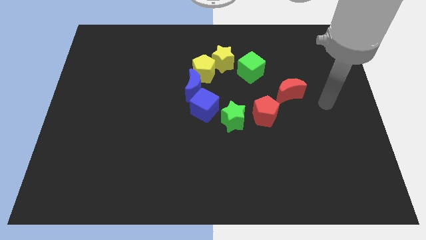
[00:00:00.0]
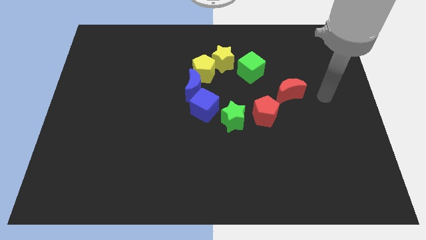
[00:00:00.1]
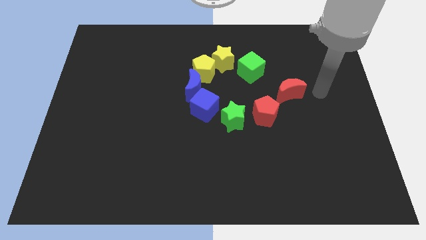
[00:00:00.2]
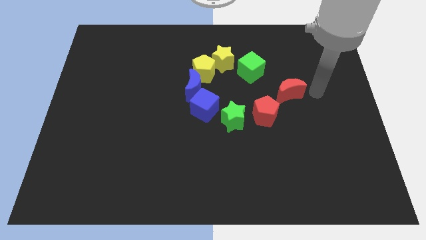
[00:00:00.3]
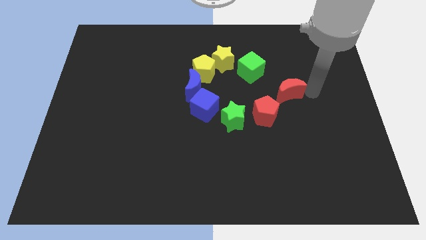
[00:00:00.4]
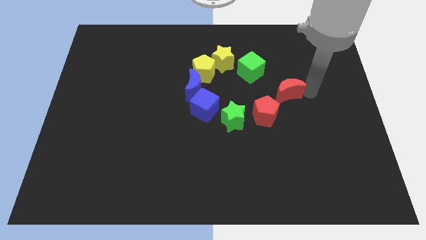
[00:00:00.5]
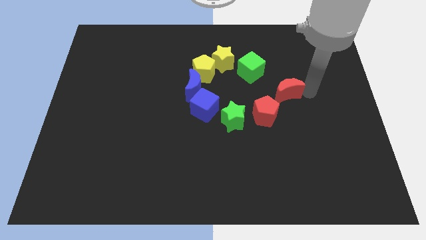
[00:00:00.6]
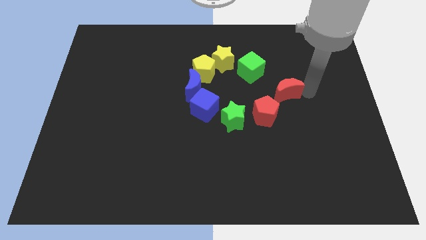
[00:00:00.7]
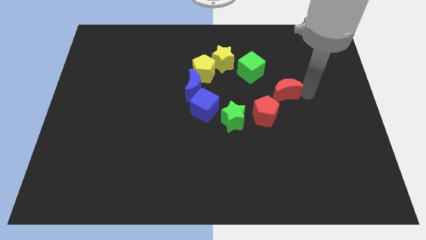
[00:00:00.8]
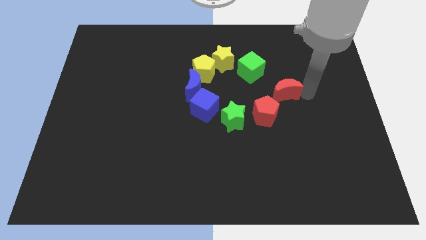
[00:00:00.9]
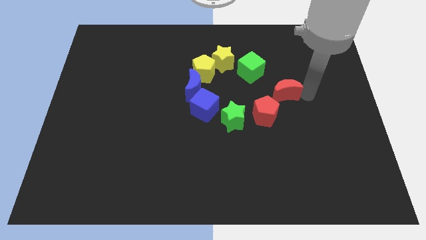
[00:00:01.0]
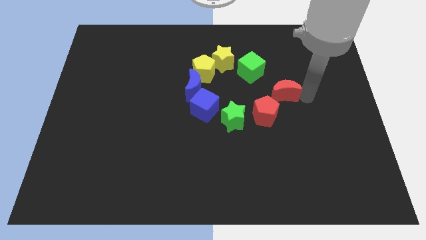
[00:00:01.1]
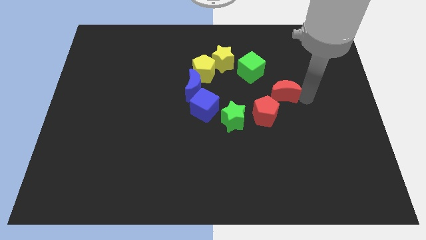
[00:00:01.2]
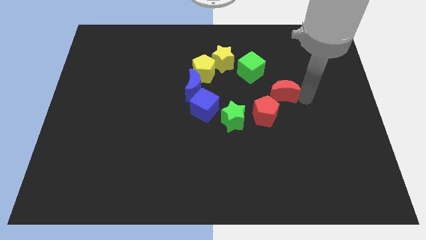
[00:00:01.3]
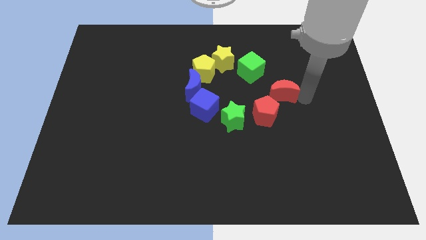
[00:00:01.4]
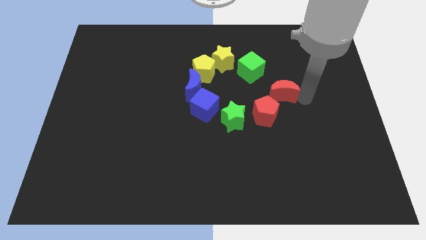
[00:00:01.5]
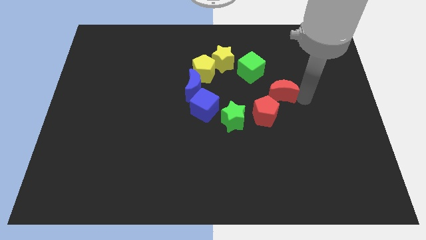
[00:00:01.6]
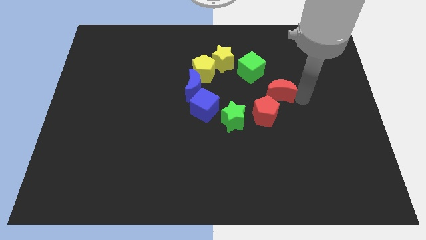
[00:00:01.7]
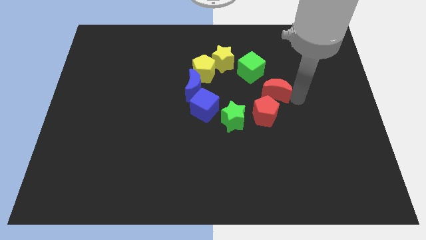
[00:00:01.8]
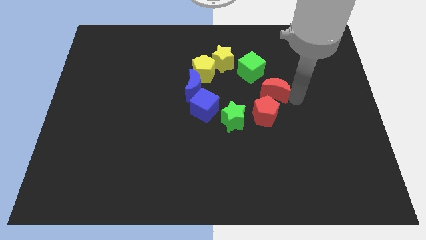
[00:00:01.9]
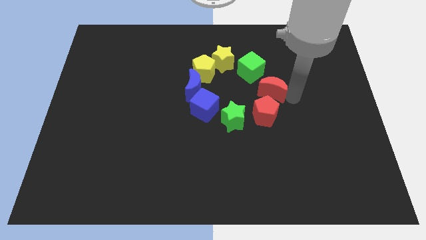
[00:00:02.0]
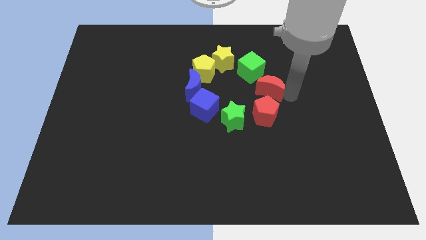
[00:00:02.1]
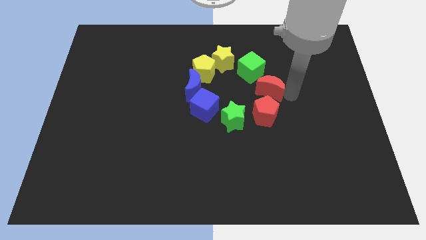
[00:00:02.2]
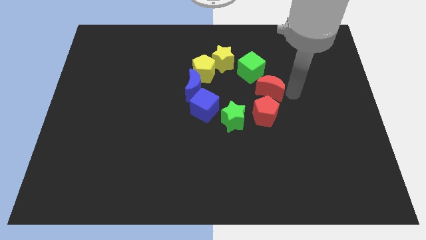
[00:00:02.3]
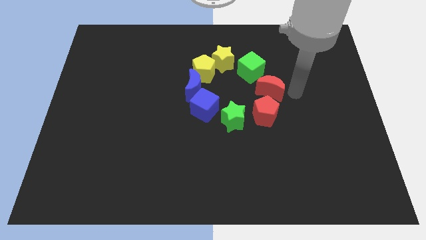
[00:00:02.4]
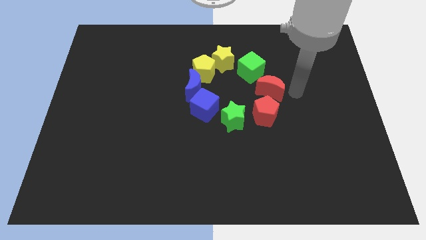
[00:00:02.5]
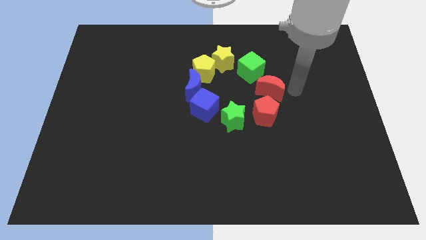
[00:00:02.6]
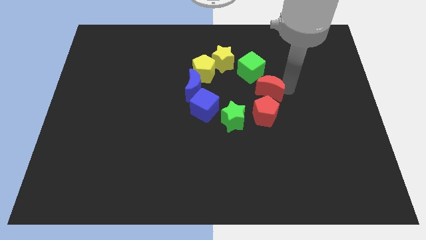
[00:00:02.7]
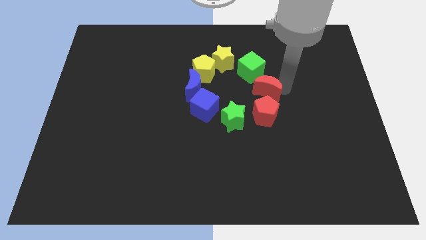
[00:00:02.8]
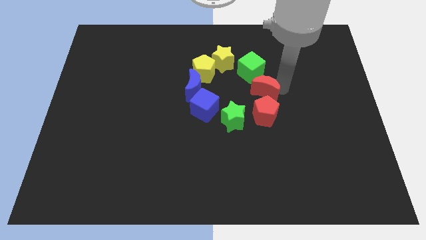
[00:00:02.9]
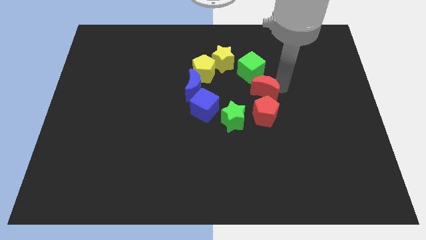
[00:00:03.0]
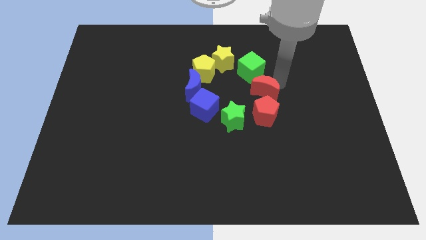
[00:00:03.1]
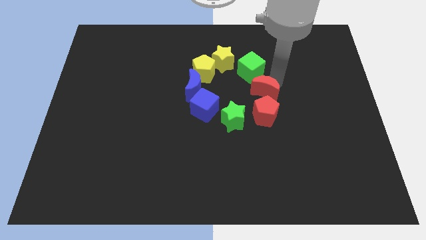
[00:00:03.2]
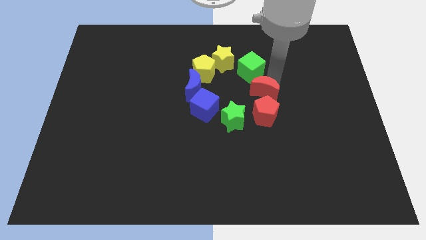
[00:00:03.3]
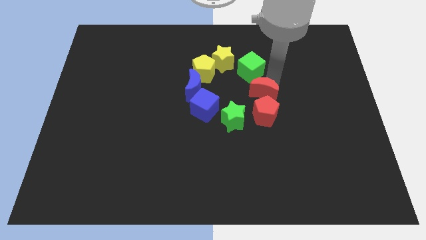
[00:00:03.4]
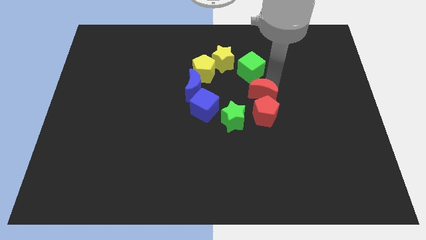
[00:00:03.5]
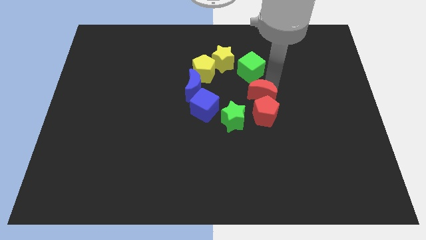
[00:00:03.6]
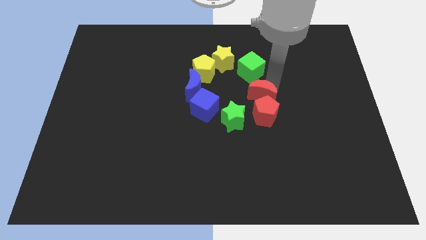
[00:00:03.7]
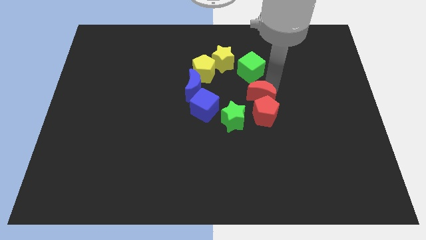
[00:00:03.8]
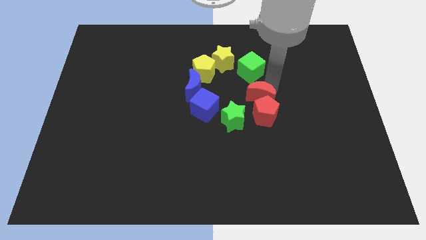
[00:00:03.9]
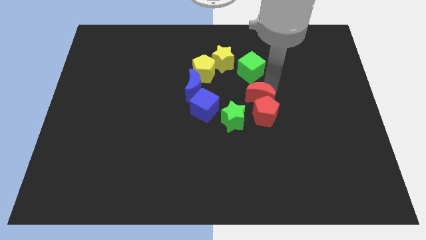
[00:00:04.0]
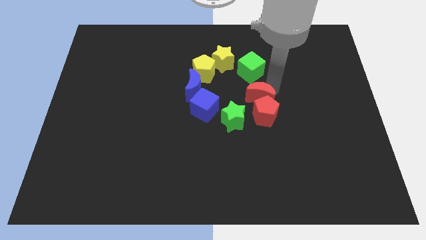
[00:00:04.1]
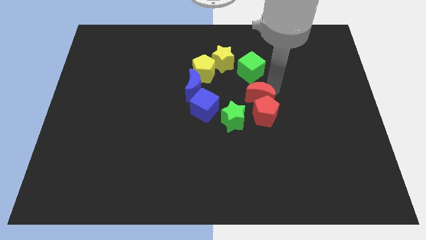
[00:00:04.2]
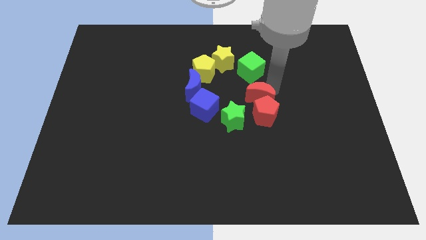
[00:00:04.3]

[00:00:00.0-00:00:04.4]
move the red moon close to the red pentagon

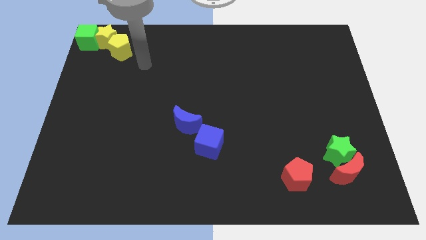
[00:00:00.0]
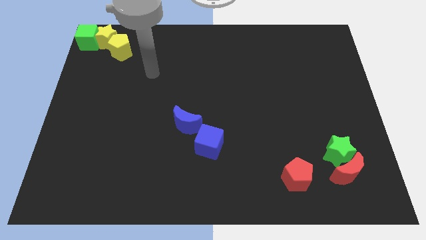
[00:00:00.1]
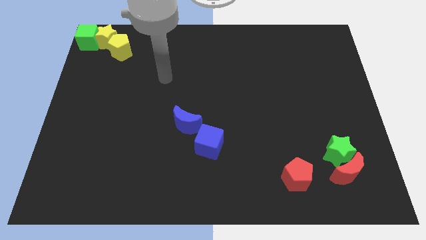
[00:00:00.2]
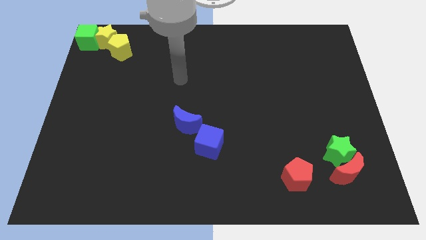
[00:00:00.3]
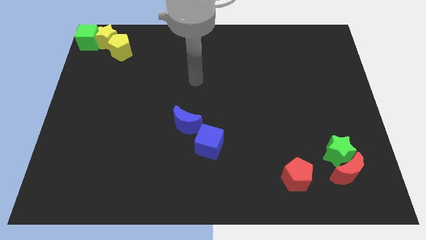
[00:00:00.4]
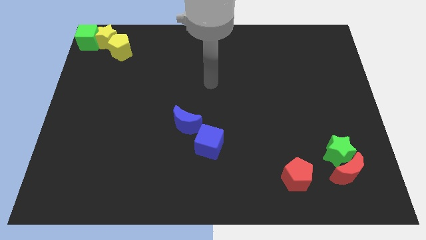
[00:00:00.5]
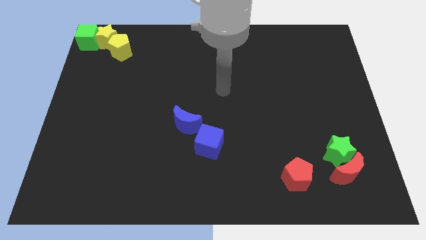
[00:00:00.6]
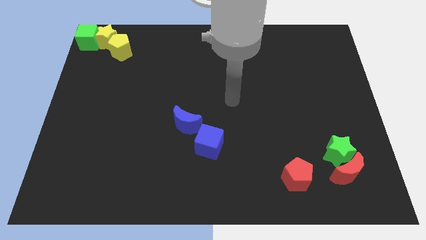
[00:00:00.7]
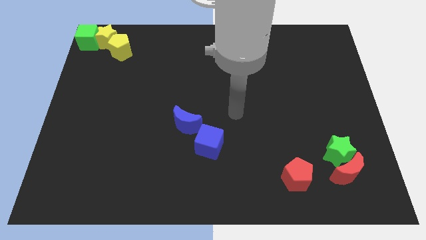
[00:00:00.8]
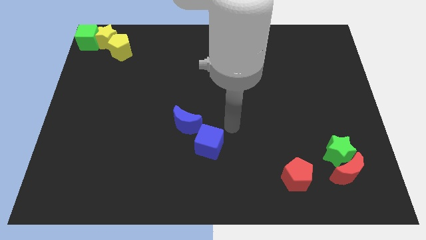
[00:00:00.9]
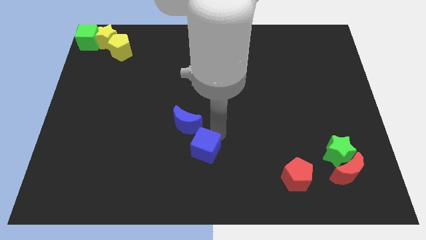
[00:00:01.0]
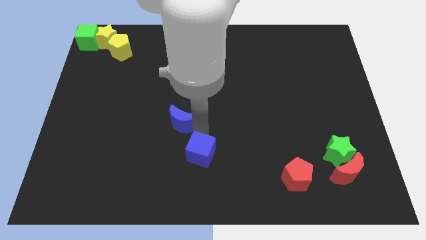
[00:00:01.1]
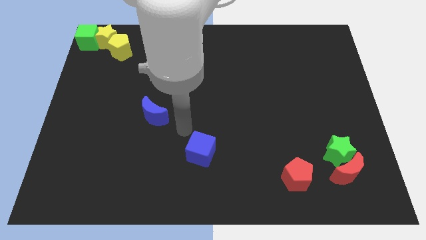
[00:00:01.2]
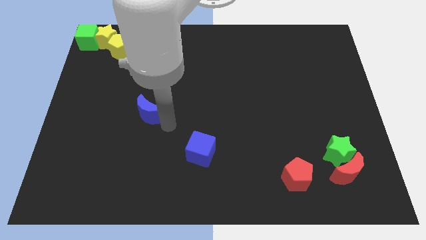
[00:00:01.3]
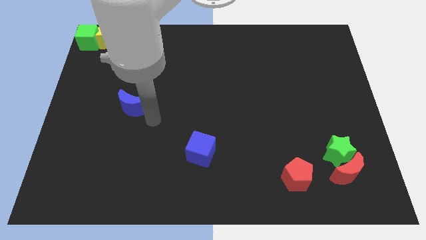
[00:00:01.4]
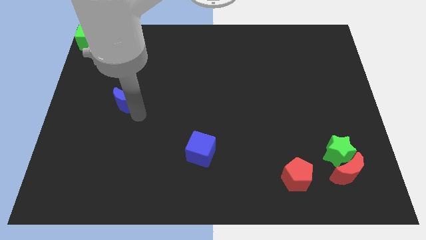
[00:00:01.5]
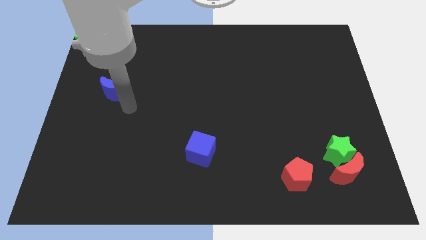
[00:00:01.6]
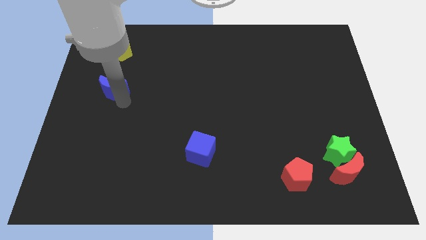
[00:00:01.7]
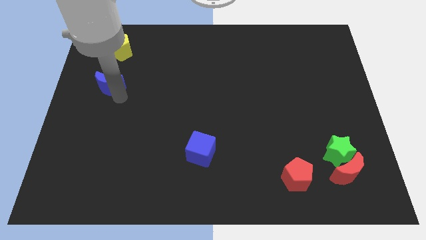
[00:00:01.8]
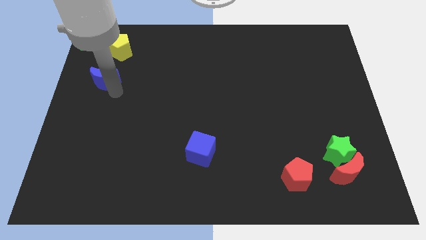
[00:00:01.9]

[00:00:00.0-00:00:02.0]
separate the blue moon towards bottom of yellow penatgon

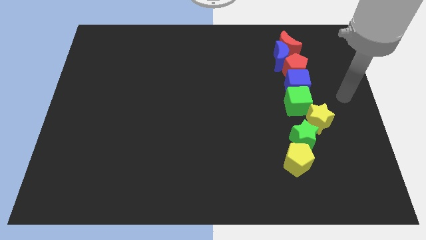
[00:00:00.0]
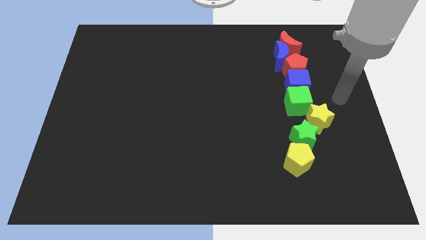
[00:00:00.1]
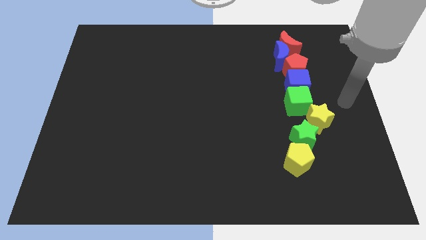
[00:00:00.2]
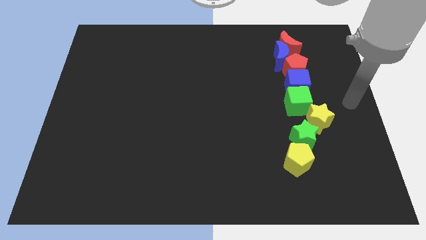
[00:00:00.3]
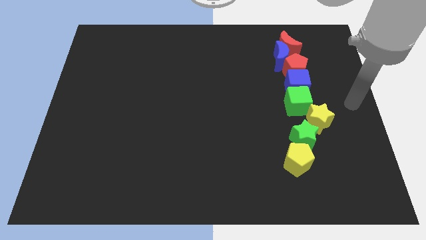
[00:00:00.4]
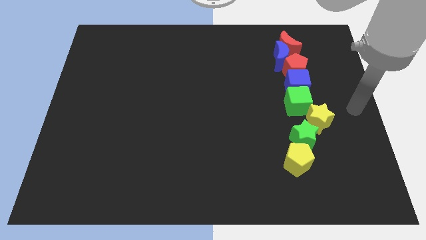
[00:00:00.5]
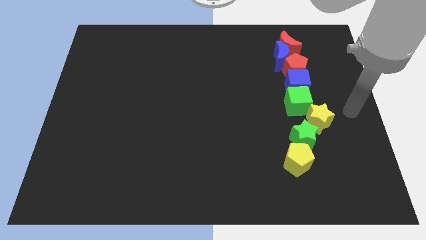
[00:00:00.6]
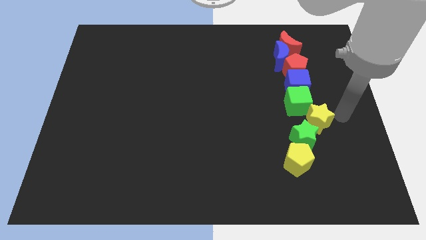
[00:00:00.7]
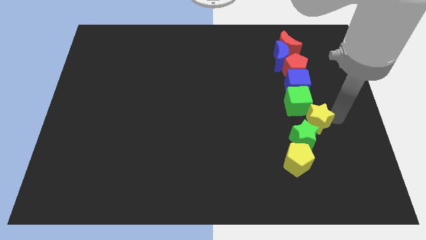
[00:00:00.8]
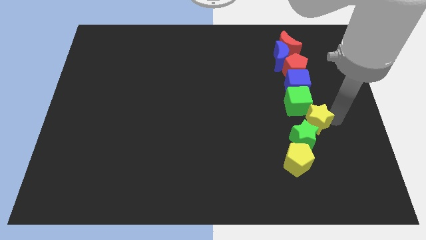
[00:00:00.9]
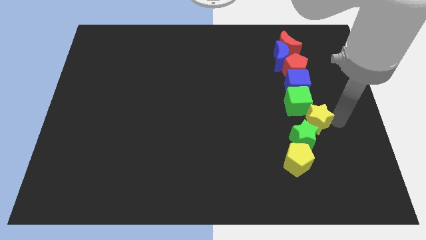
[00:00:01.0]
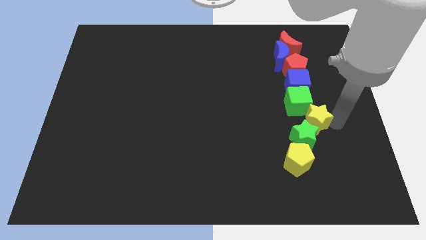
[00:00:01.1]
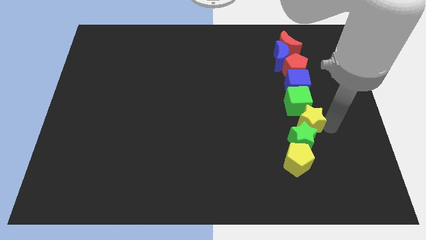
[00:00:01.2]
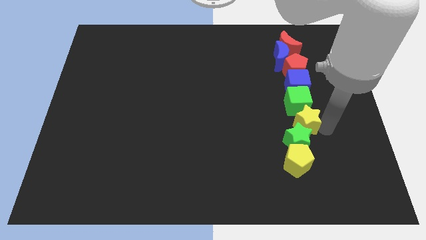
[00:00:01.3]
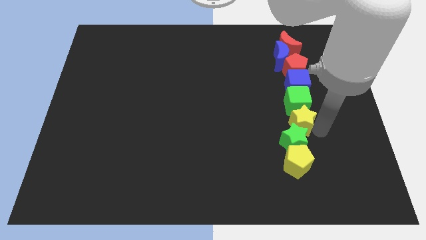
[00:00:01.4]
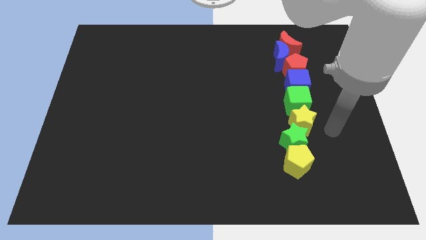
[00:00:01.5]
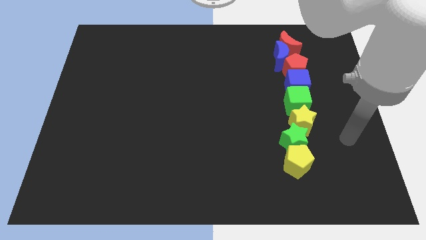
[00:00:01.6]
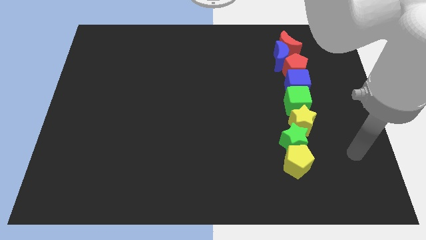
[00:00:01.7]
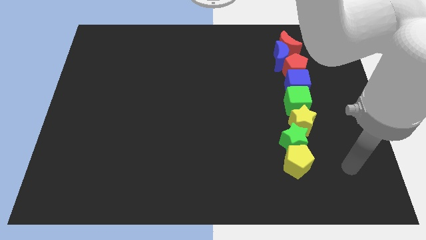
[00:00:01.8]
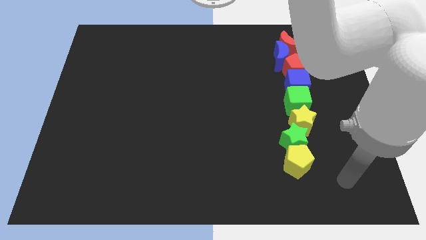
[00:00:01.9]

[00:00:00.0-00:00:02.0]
move the yellow star slightly to the bottom of the green cube

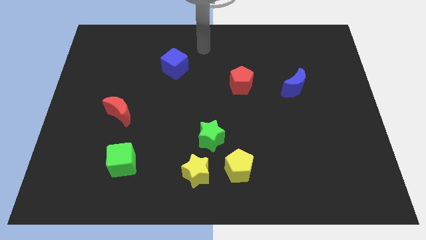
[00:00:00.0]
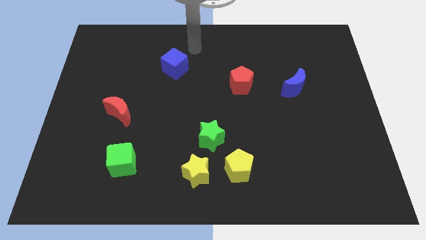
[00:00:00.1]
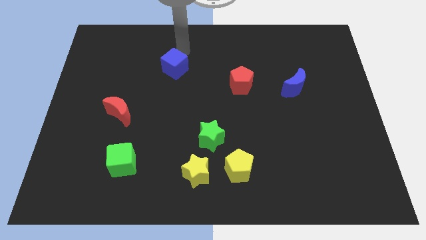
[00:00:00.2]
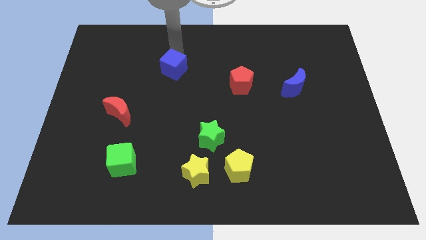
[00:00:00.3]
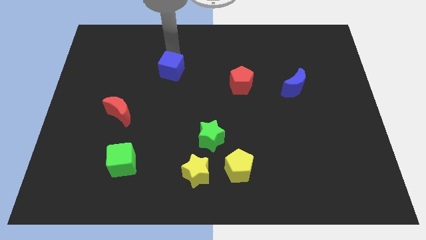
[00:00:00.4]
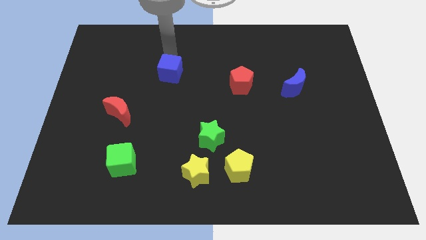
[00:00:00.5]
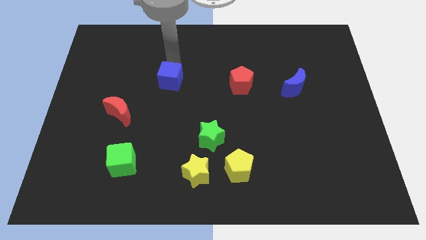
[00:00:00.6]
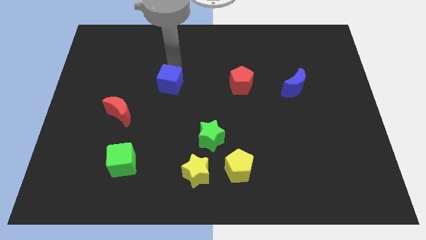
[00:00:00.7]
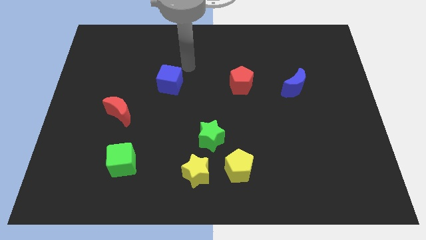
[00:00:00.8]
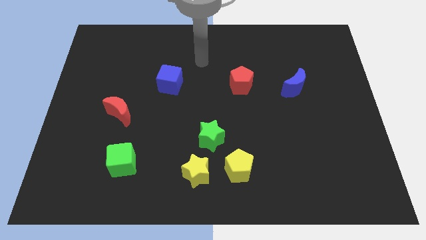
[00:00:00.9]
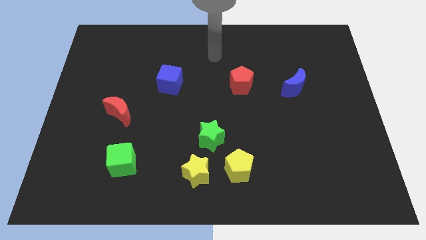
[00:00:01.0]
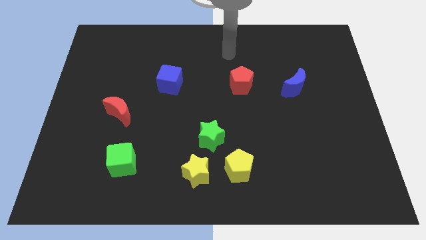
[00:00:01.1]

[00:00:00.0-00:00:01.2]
place the blue cube horizontal to the left of red pentagon
